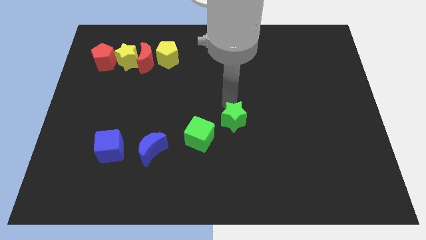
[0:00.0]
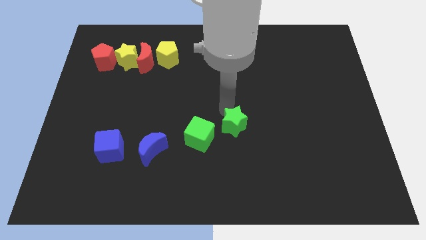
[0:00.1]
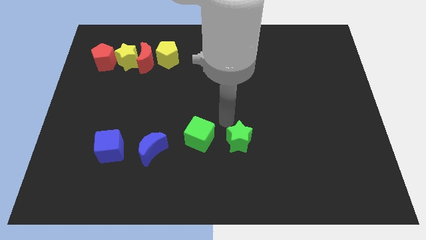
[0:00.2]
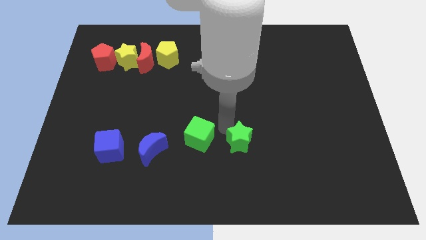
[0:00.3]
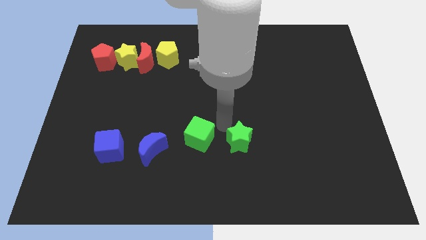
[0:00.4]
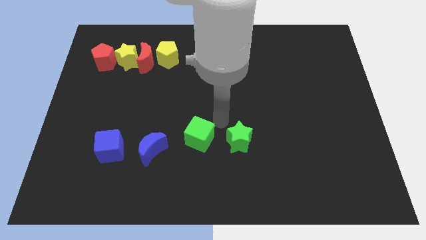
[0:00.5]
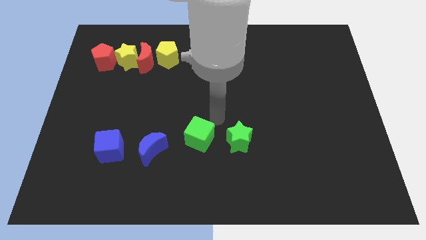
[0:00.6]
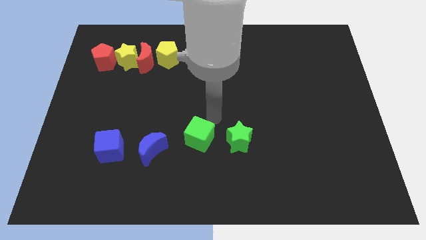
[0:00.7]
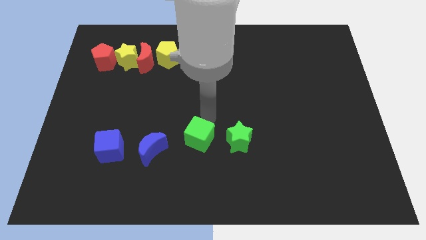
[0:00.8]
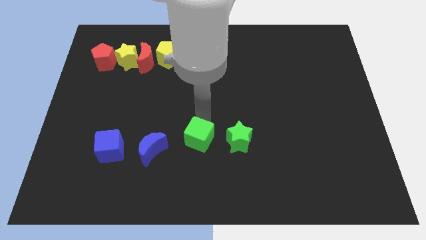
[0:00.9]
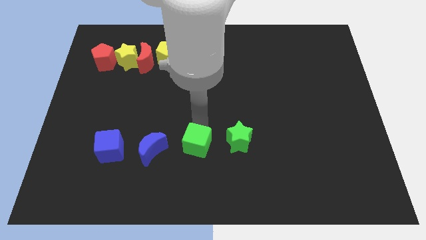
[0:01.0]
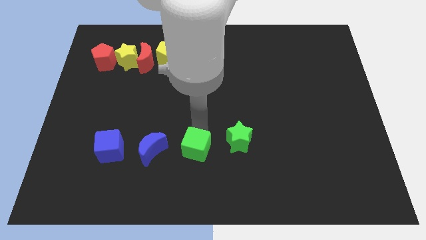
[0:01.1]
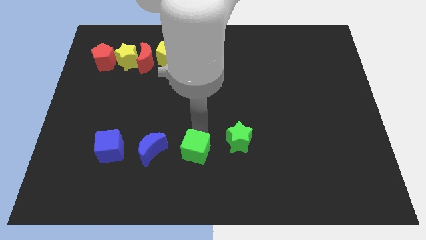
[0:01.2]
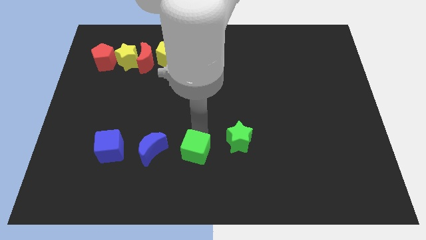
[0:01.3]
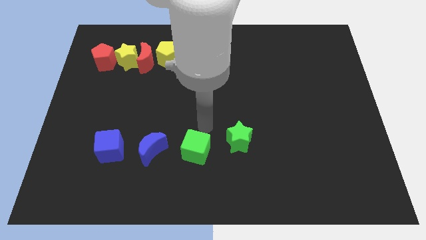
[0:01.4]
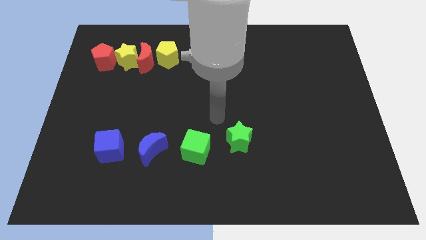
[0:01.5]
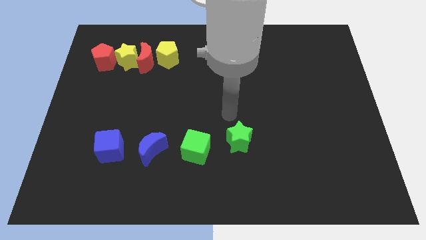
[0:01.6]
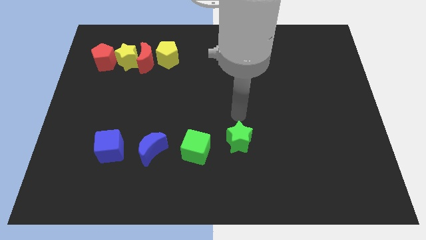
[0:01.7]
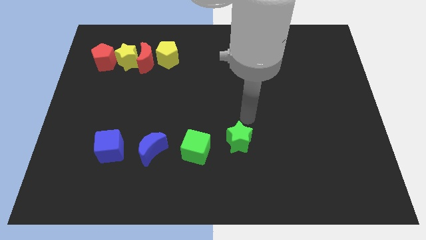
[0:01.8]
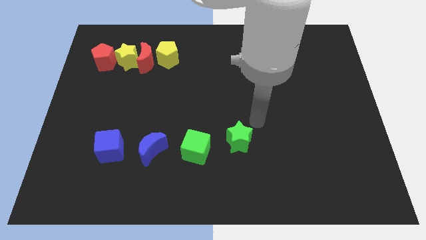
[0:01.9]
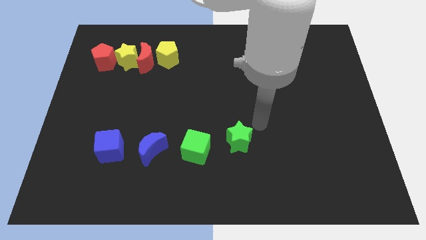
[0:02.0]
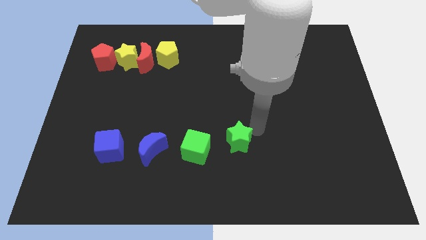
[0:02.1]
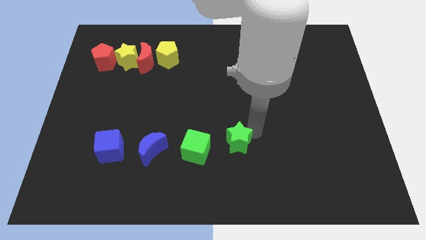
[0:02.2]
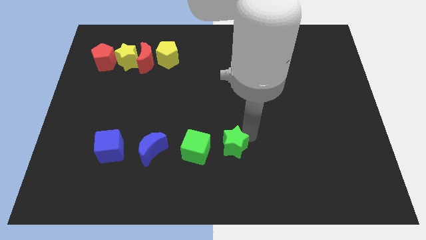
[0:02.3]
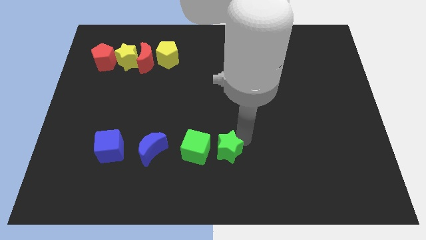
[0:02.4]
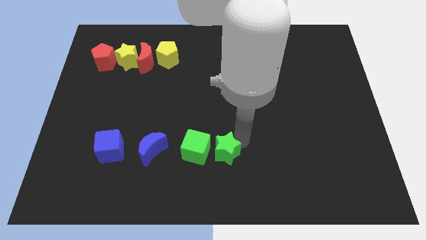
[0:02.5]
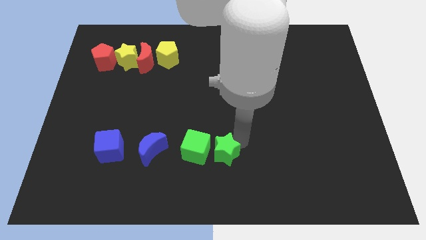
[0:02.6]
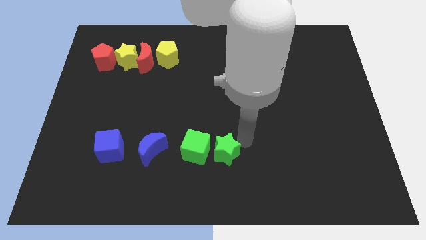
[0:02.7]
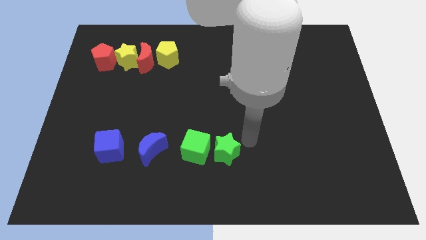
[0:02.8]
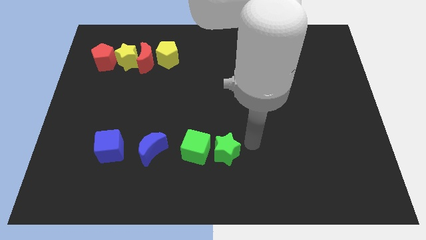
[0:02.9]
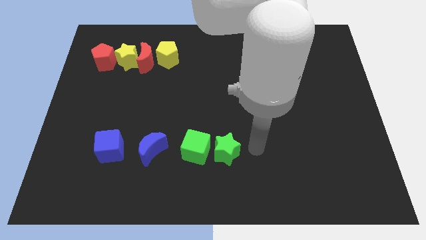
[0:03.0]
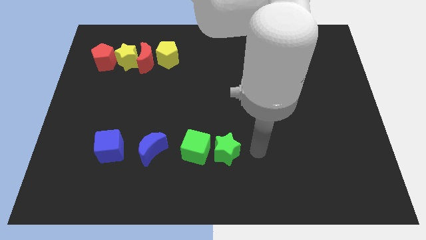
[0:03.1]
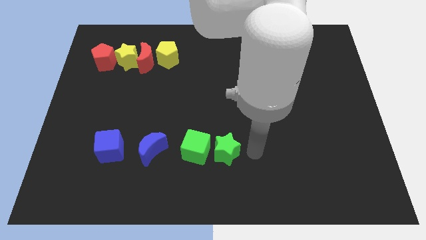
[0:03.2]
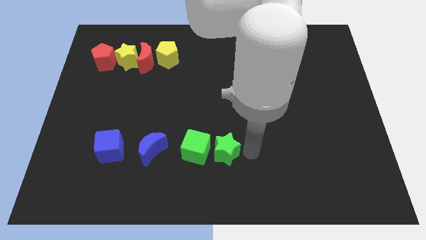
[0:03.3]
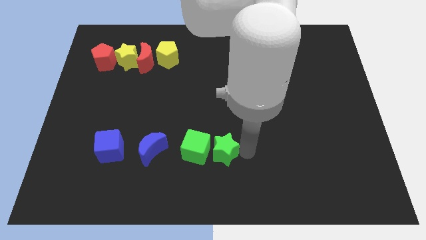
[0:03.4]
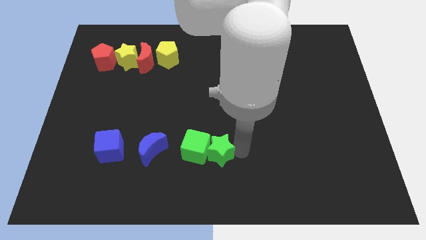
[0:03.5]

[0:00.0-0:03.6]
place teh green blocks together beside blue moon to the right

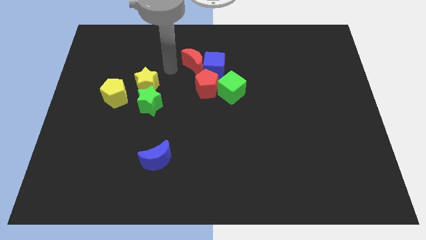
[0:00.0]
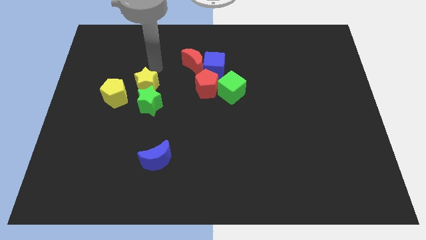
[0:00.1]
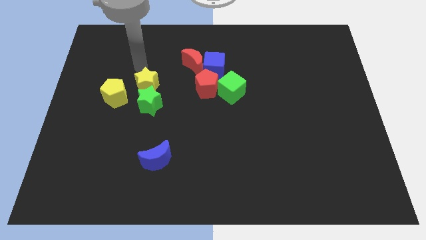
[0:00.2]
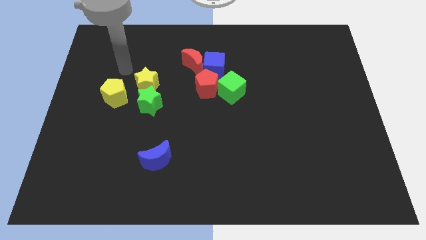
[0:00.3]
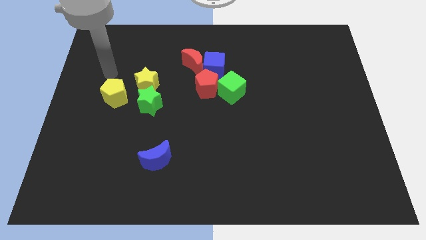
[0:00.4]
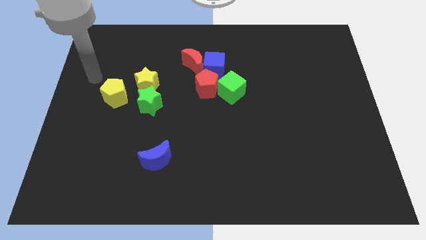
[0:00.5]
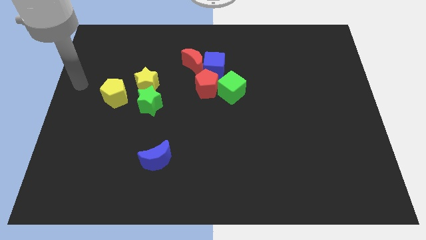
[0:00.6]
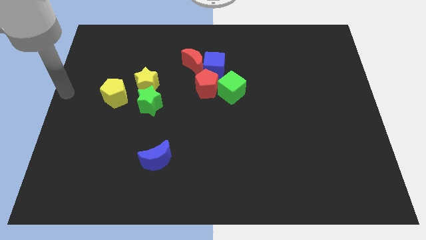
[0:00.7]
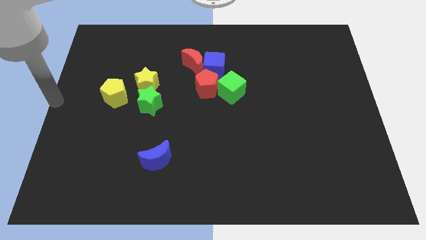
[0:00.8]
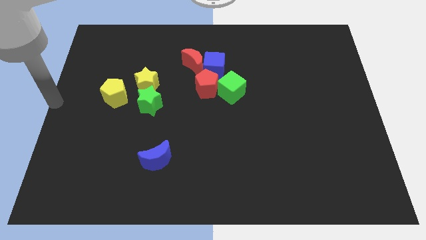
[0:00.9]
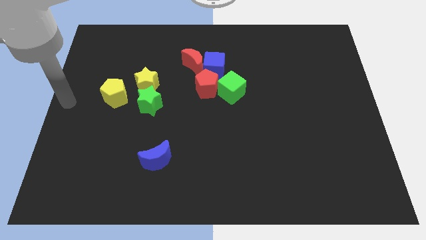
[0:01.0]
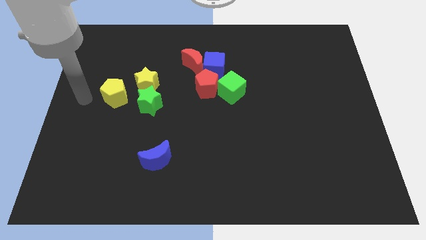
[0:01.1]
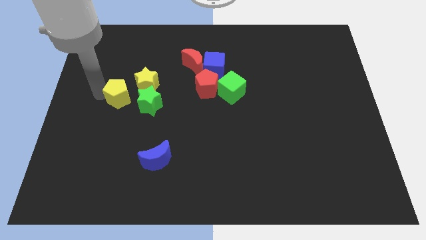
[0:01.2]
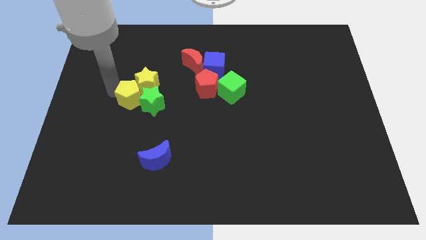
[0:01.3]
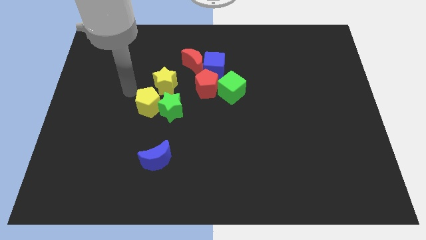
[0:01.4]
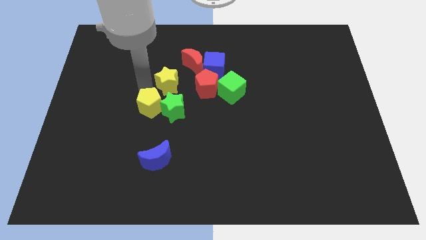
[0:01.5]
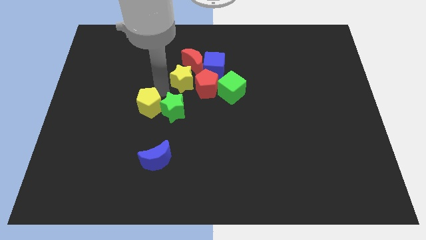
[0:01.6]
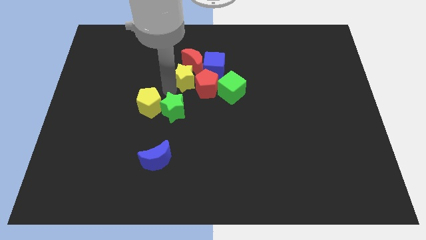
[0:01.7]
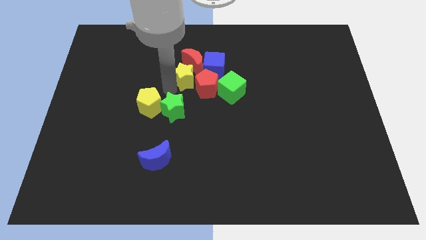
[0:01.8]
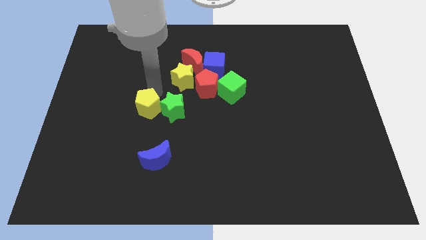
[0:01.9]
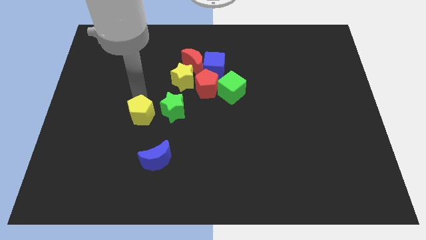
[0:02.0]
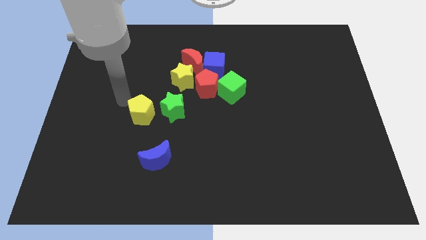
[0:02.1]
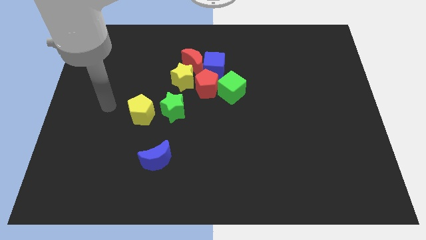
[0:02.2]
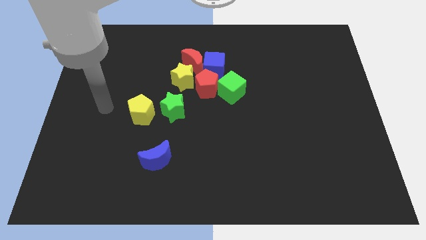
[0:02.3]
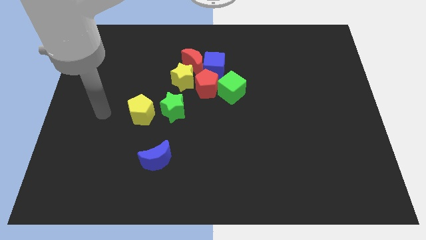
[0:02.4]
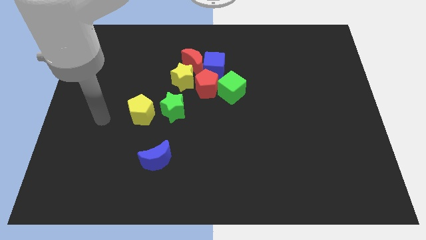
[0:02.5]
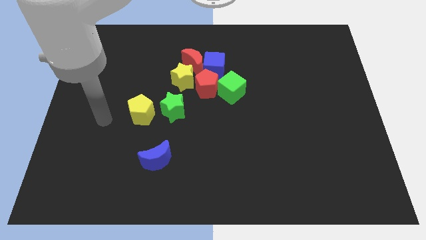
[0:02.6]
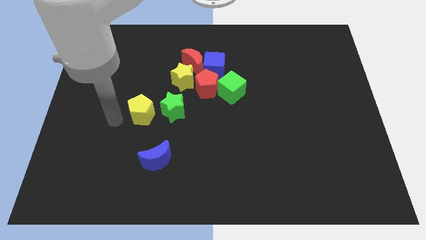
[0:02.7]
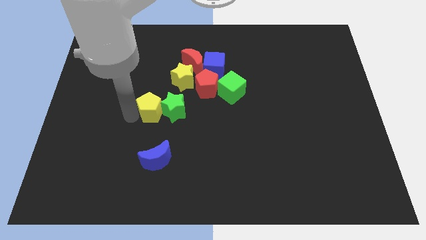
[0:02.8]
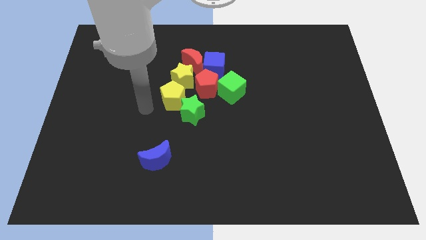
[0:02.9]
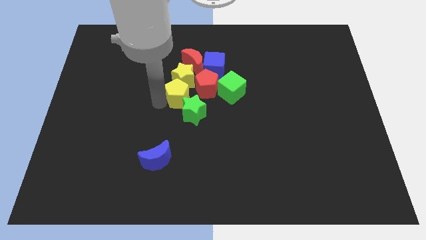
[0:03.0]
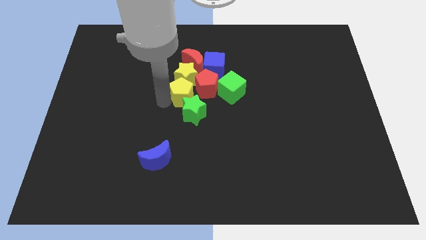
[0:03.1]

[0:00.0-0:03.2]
put the yellow pentagon in between the green star and the yellow star

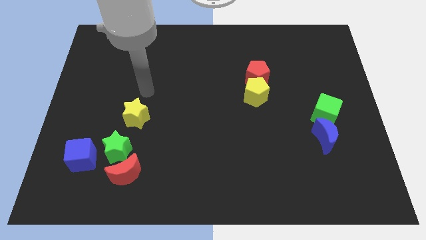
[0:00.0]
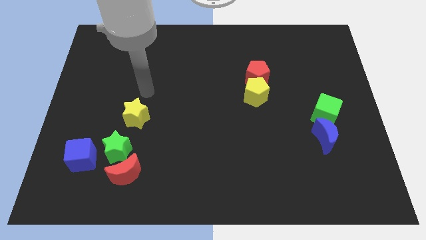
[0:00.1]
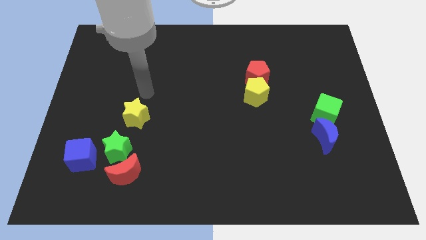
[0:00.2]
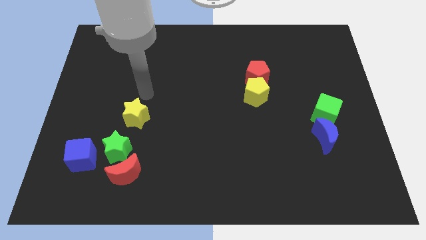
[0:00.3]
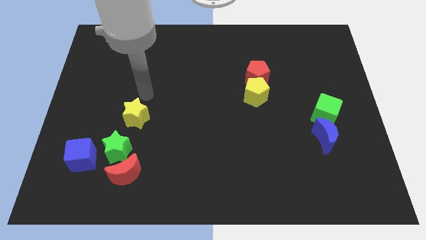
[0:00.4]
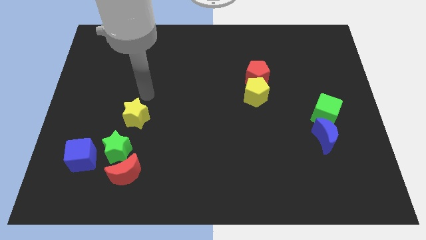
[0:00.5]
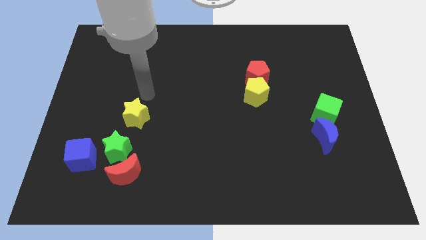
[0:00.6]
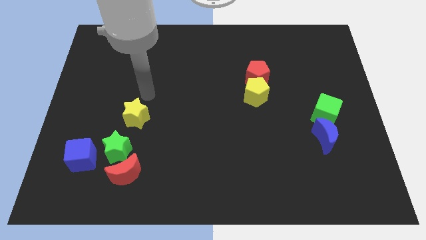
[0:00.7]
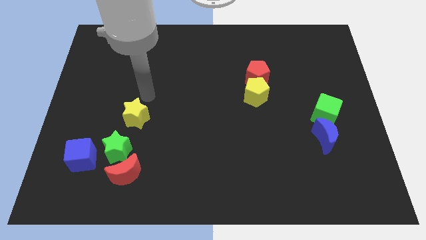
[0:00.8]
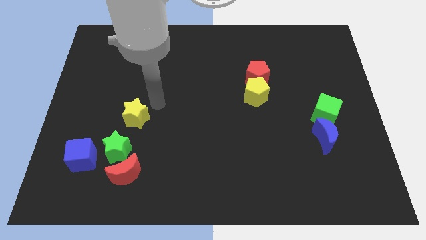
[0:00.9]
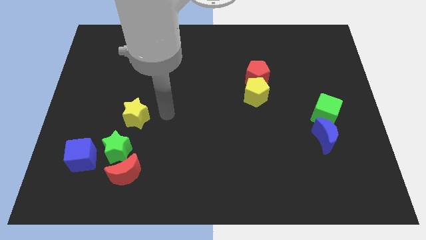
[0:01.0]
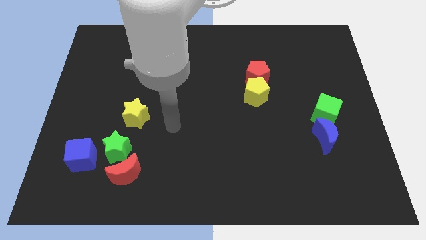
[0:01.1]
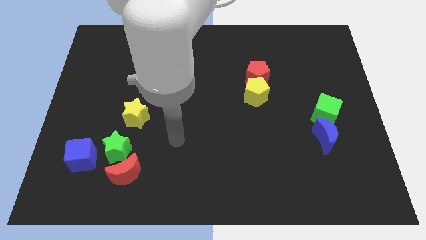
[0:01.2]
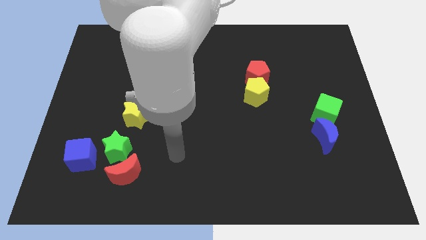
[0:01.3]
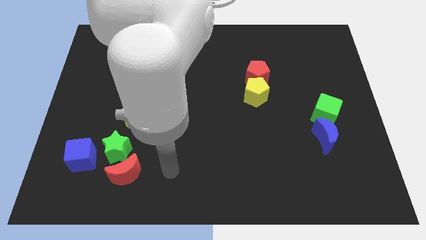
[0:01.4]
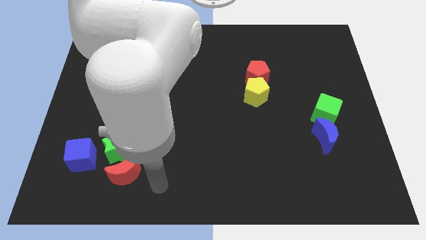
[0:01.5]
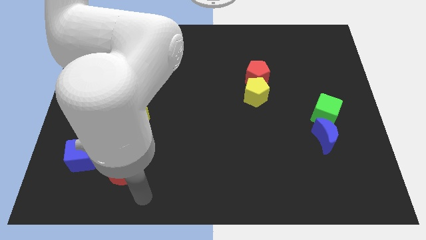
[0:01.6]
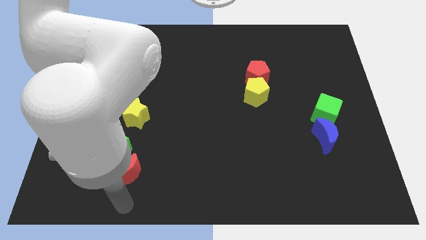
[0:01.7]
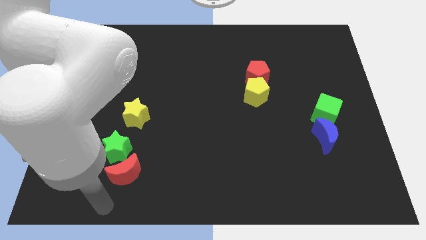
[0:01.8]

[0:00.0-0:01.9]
move your arm to the bottom side of the red crescent

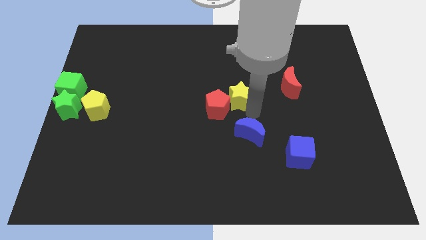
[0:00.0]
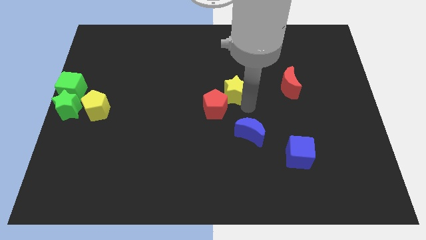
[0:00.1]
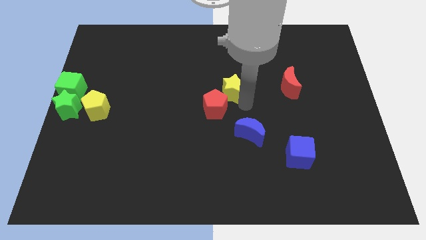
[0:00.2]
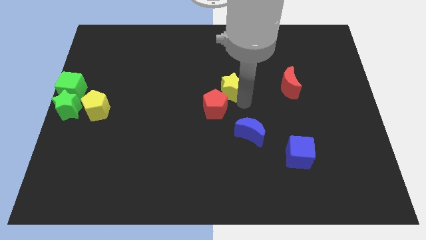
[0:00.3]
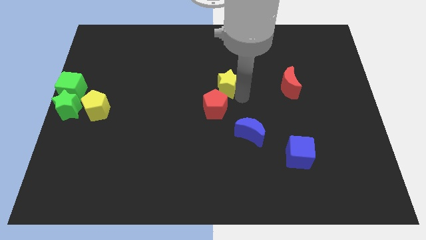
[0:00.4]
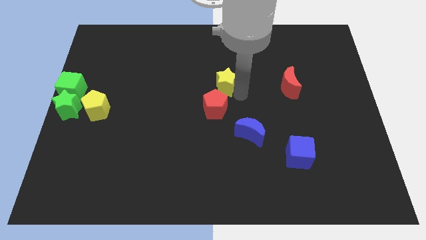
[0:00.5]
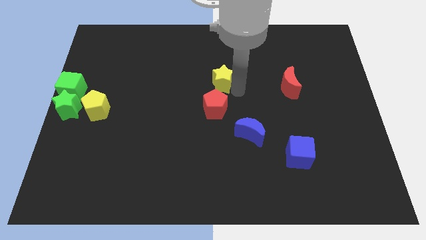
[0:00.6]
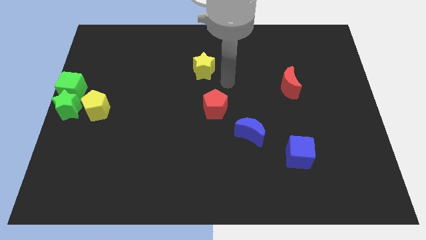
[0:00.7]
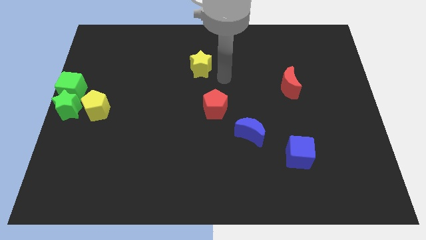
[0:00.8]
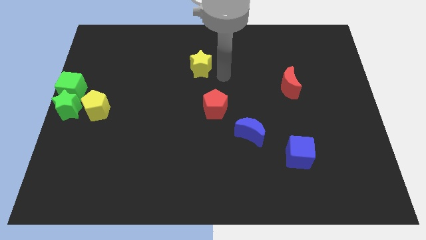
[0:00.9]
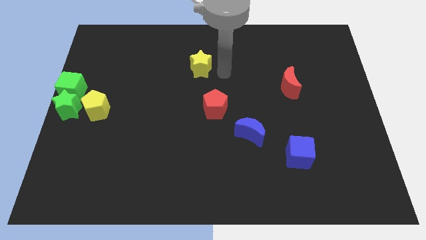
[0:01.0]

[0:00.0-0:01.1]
separate yellow star from red pentagon
